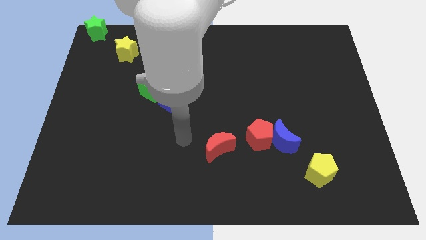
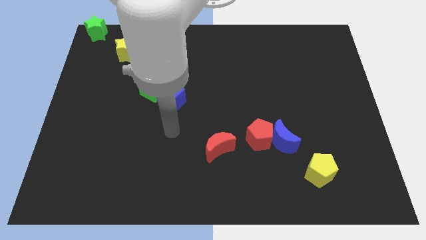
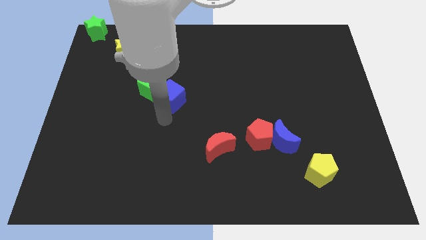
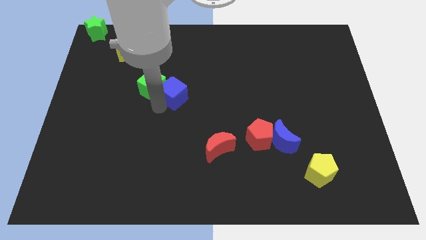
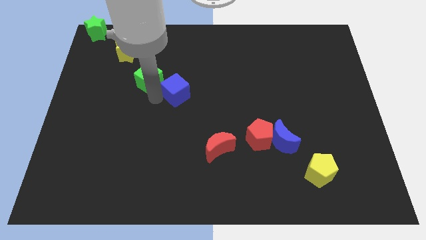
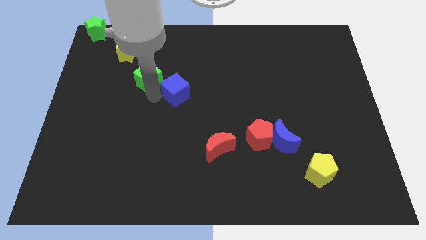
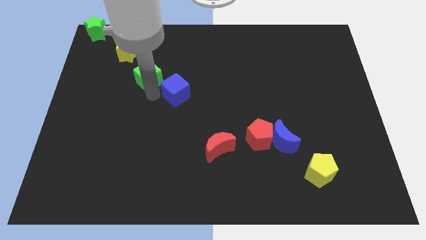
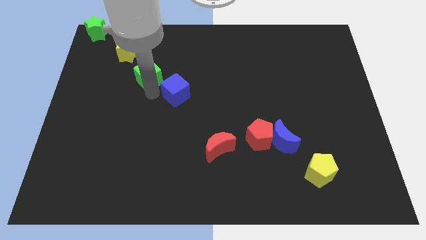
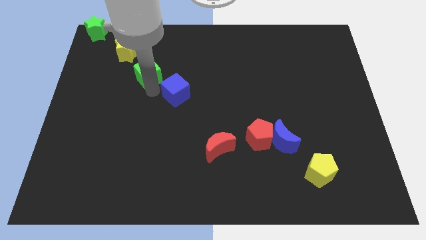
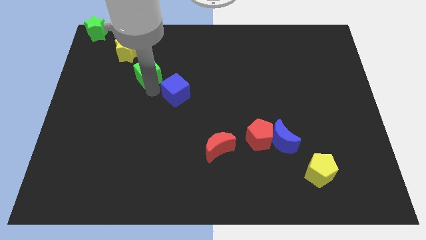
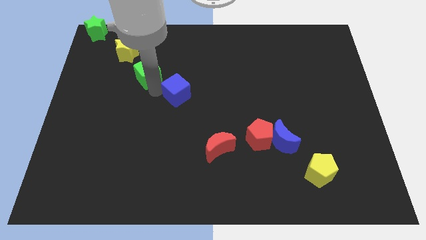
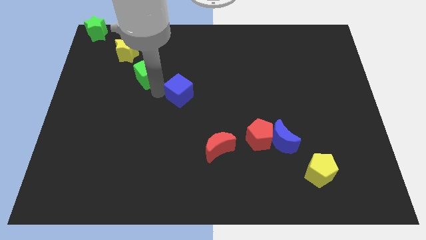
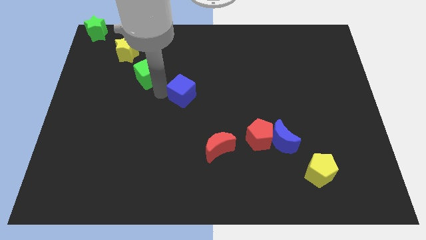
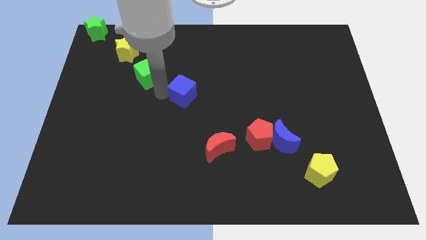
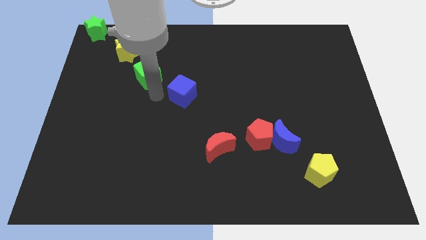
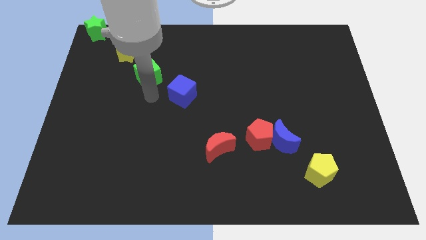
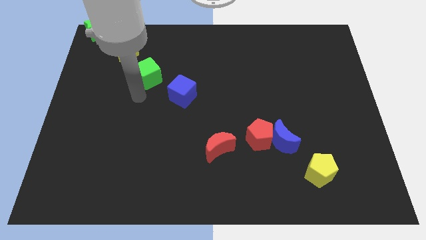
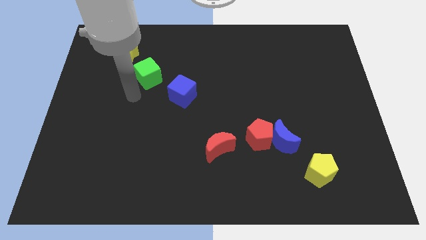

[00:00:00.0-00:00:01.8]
separate both the blue cube and green cube

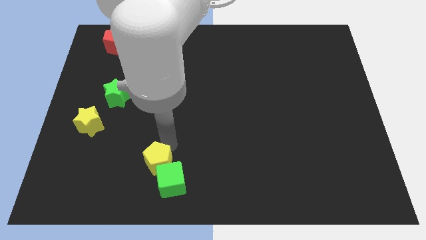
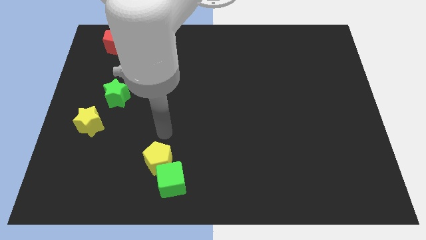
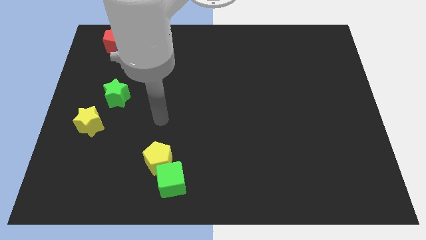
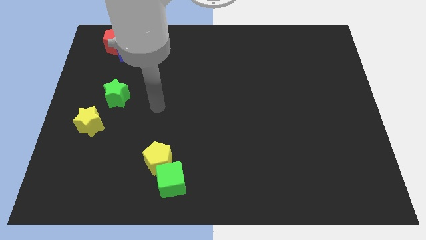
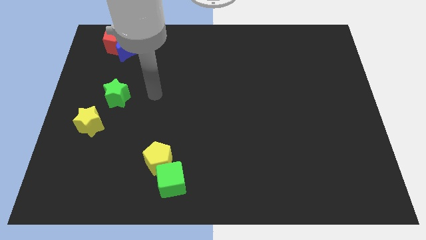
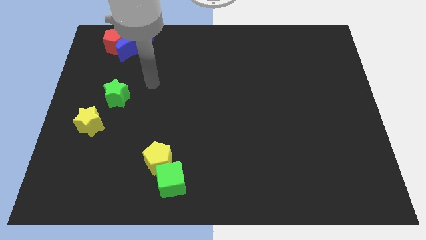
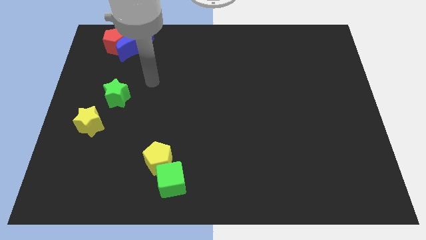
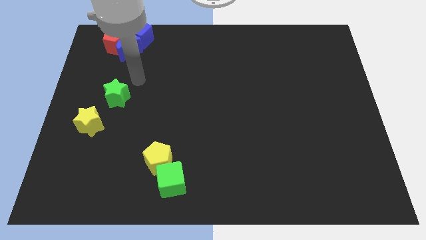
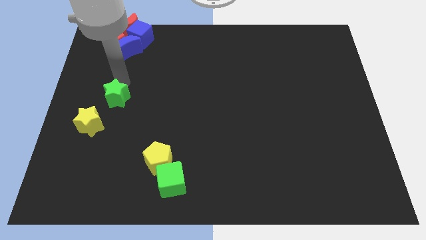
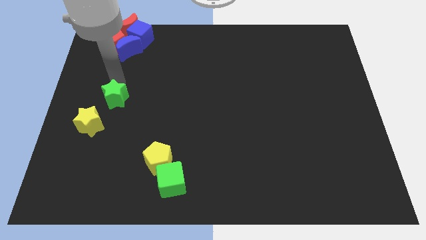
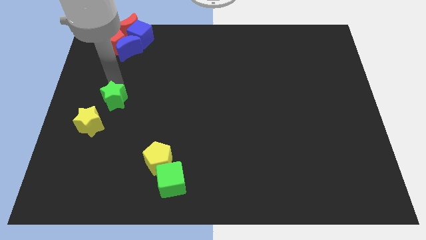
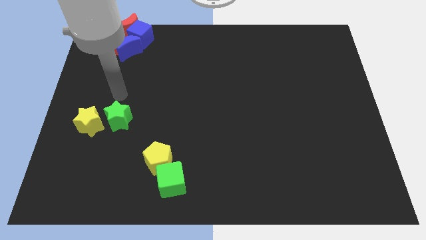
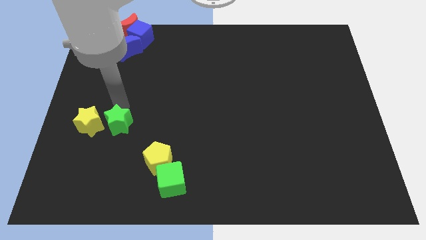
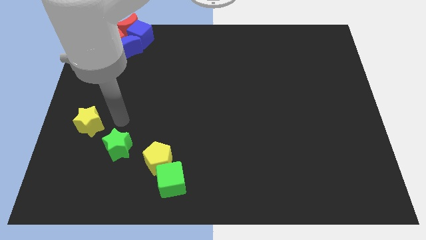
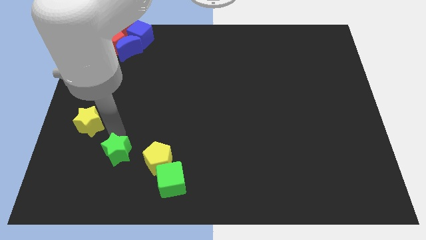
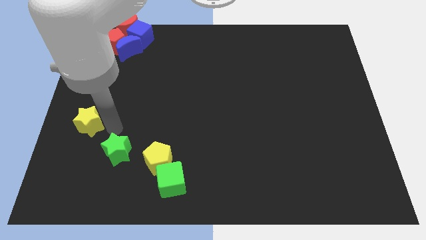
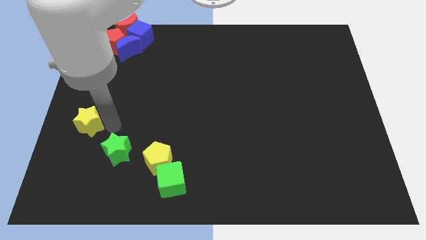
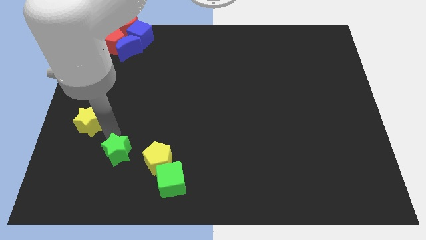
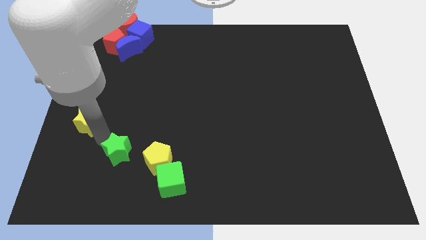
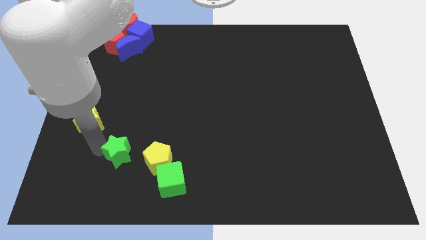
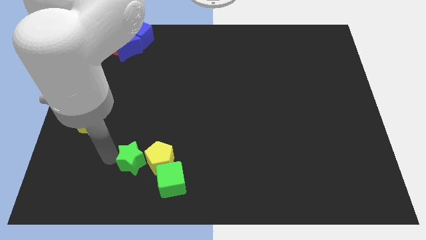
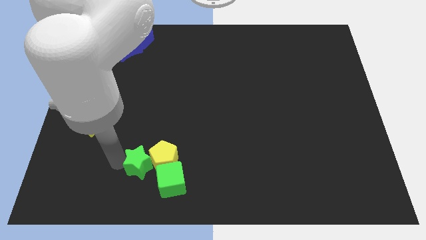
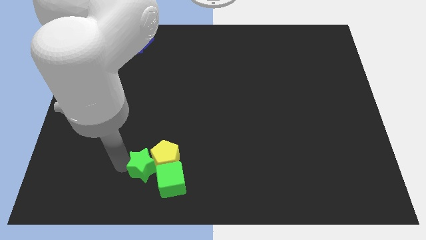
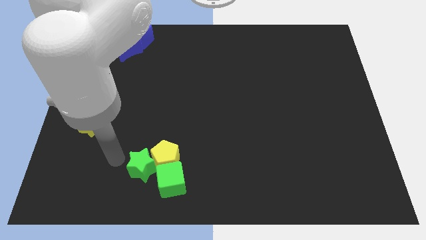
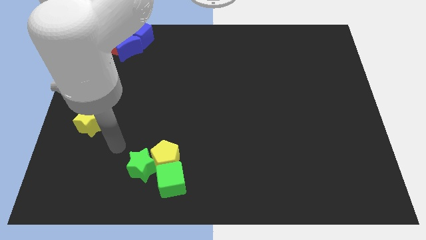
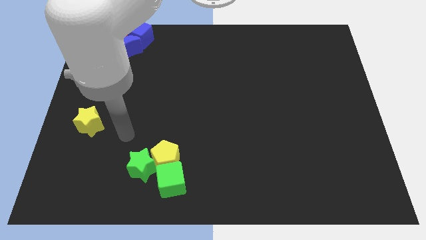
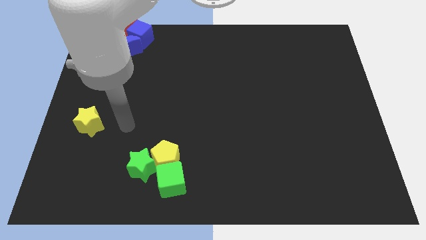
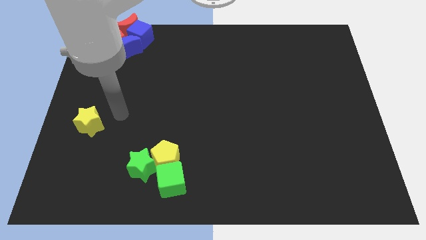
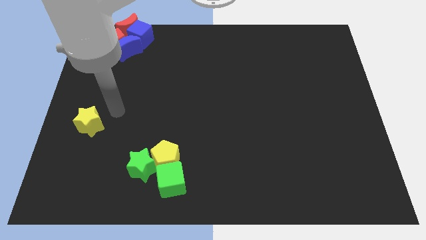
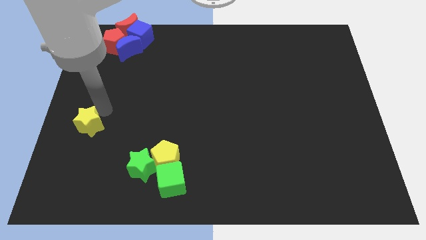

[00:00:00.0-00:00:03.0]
move the green star into the yellow pentagon

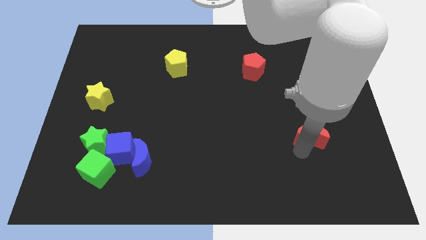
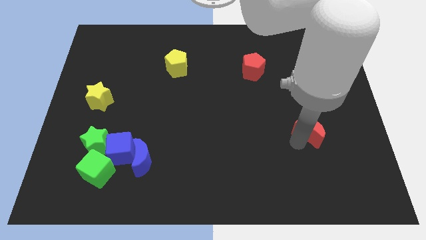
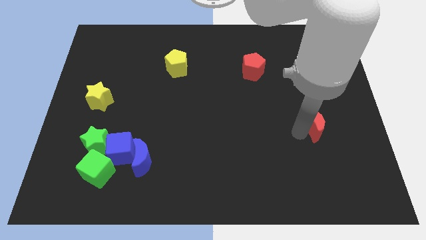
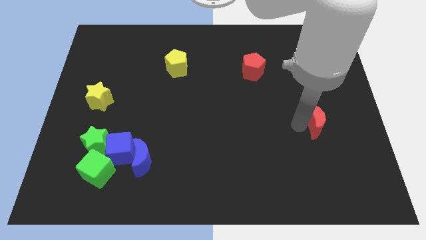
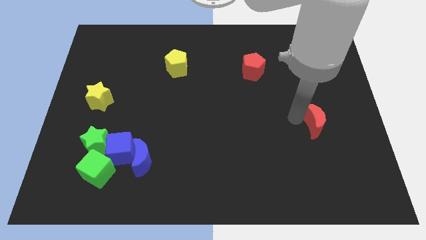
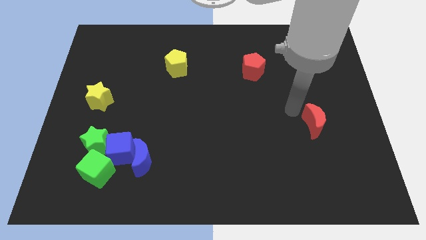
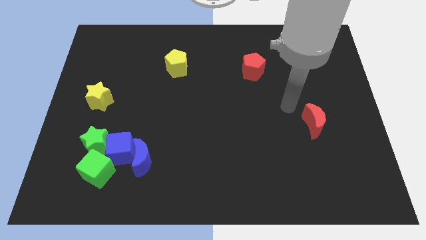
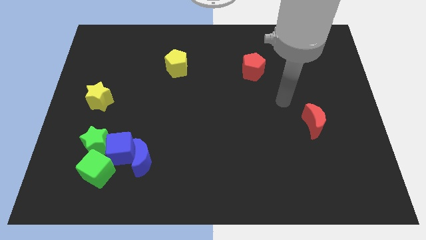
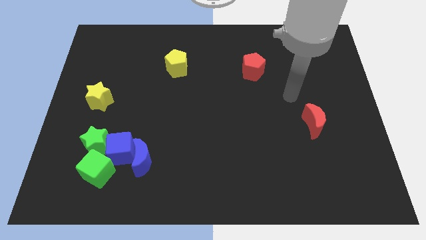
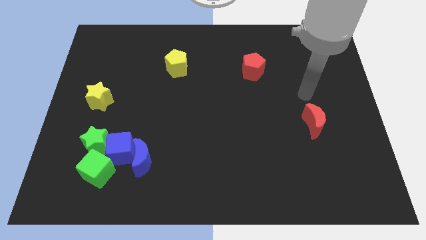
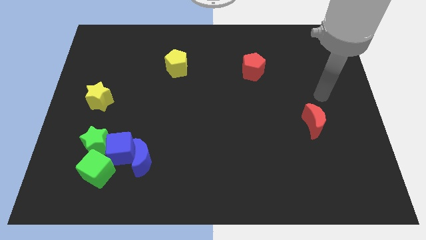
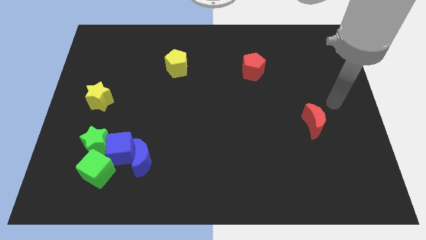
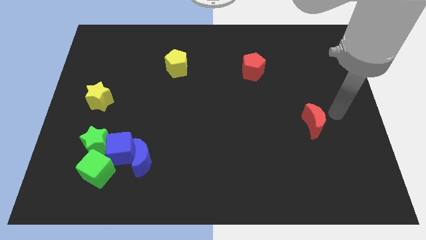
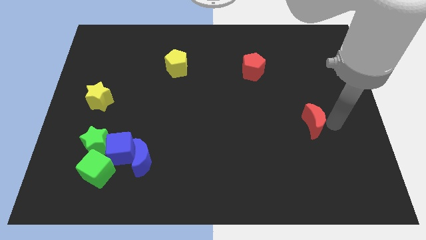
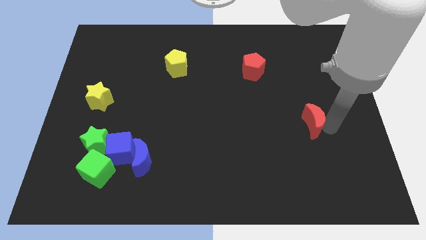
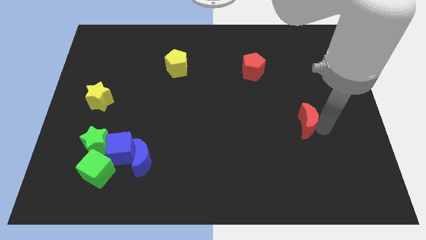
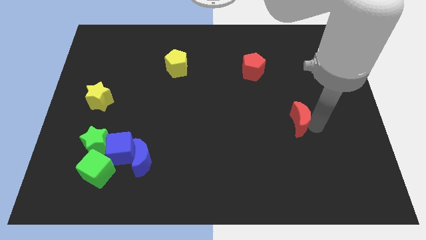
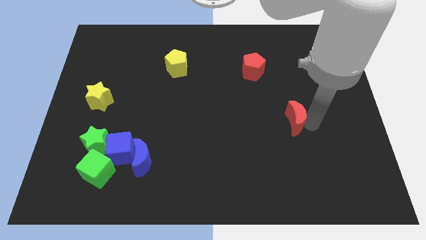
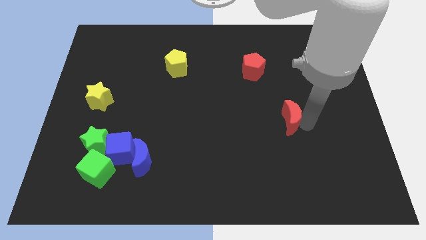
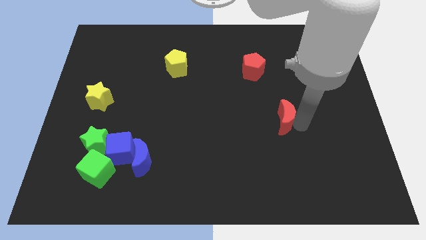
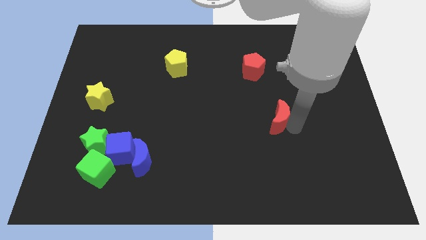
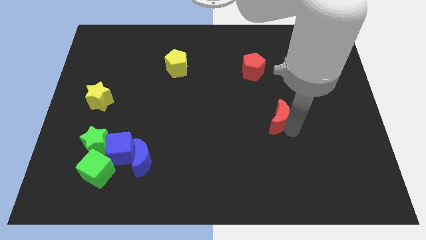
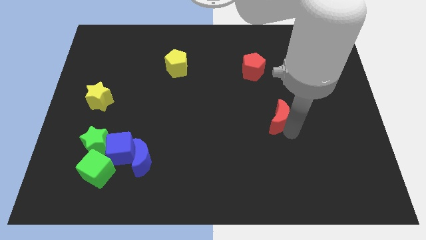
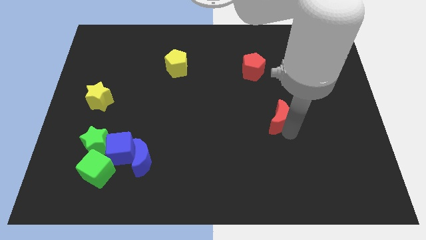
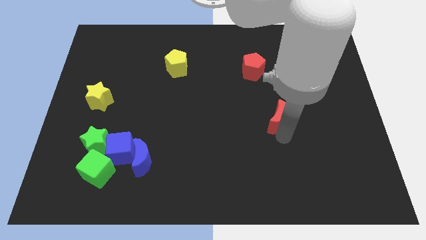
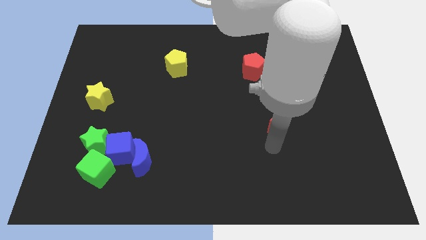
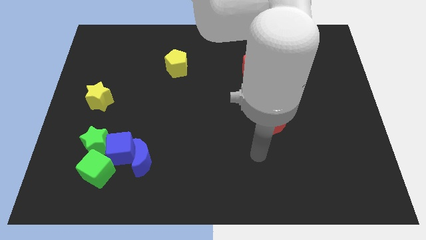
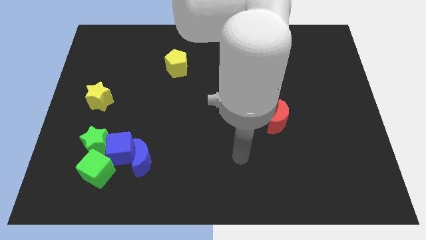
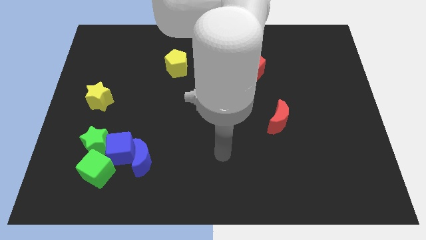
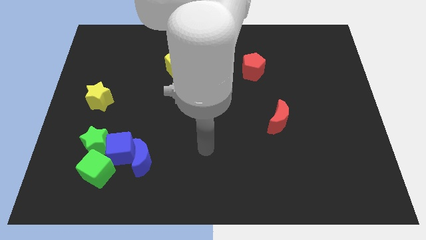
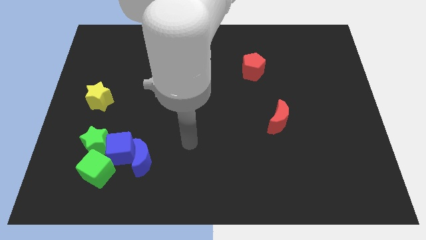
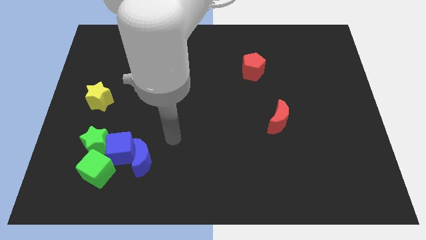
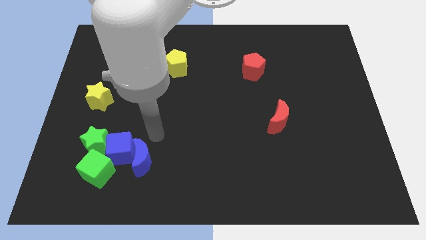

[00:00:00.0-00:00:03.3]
move the red moon diagonally bottom right to red pentagon

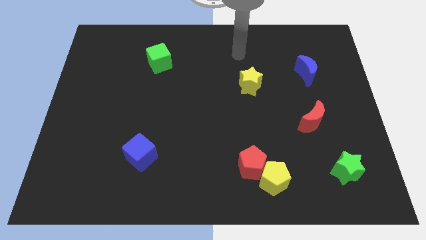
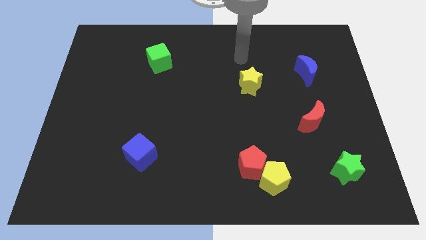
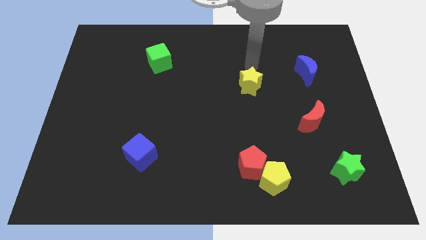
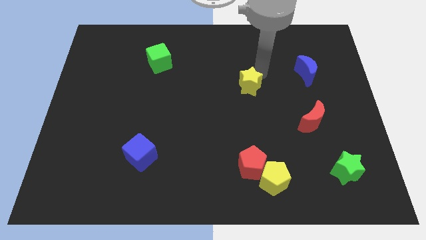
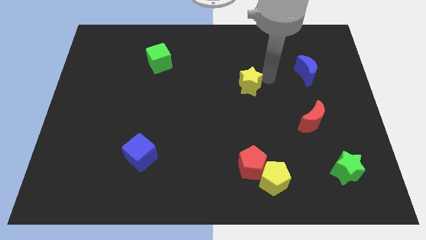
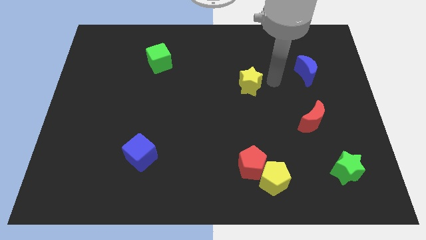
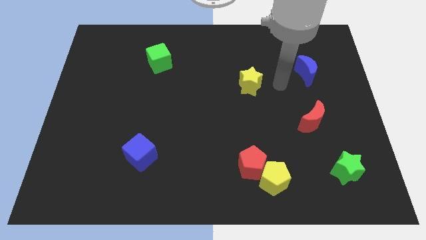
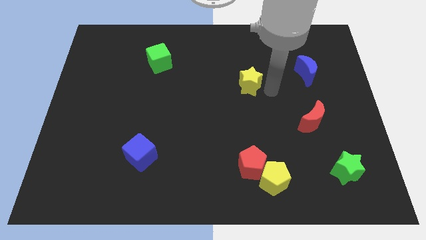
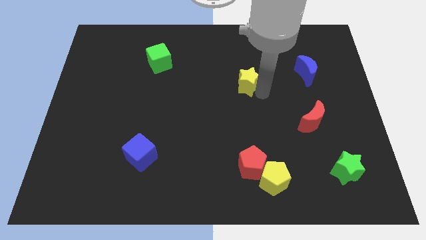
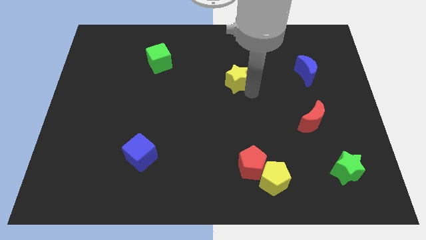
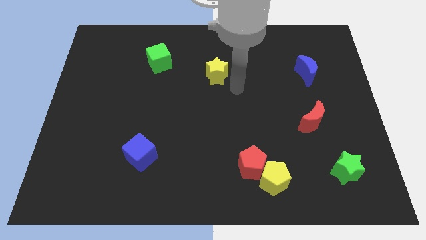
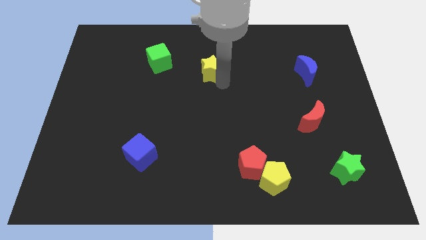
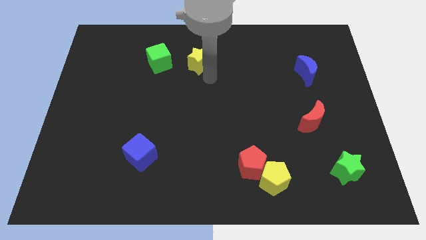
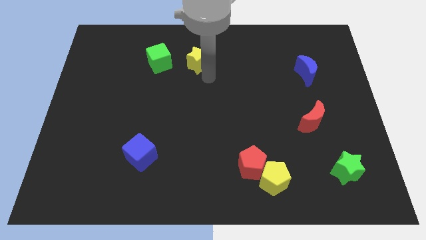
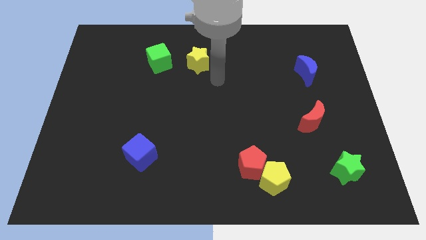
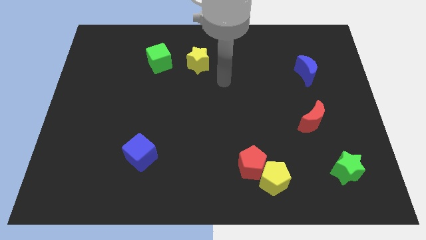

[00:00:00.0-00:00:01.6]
push the yellow star to the right side of the green cube
